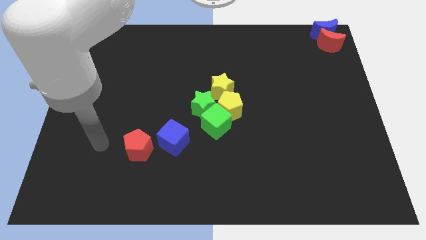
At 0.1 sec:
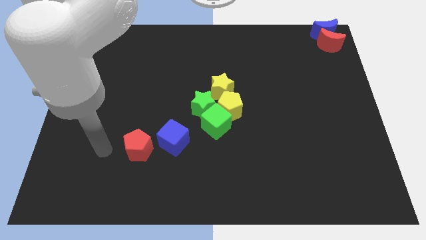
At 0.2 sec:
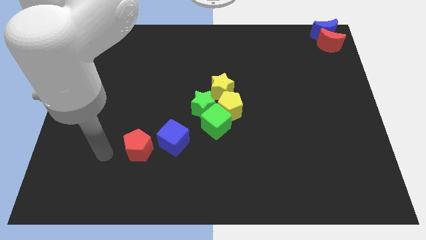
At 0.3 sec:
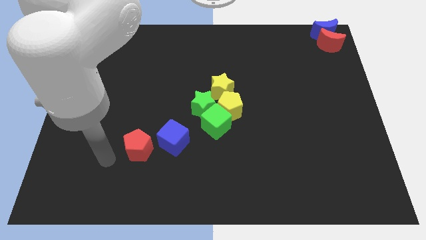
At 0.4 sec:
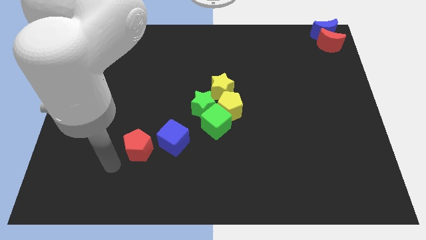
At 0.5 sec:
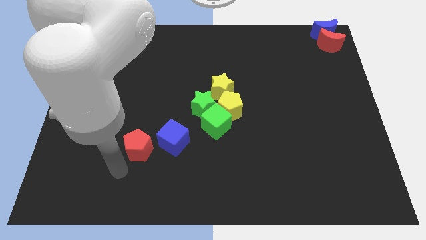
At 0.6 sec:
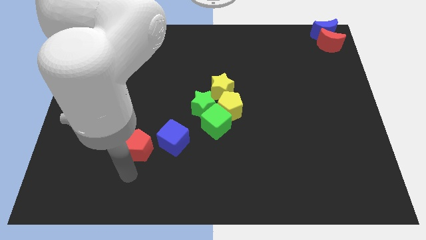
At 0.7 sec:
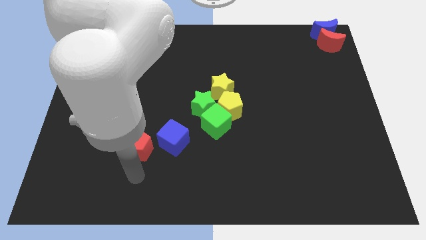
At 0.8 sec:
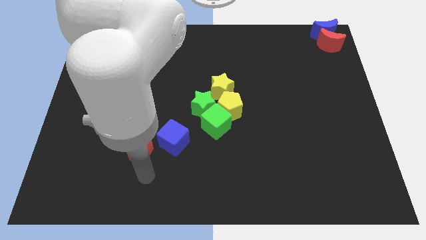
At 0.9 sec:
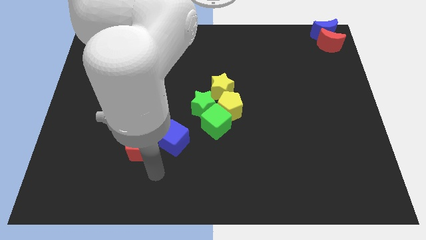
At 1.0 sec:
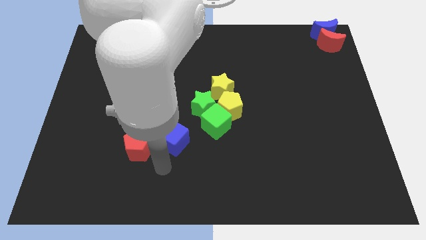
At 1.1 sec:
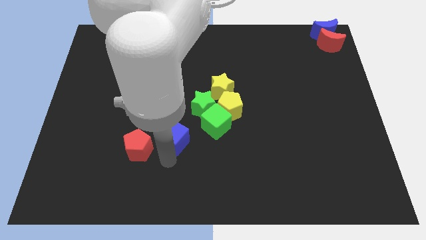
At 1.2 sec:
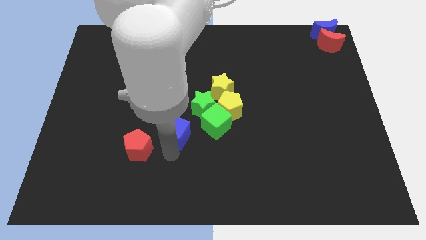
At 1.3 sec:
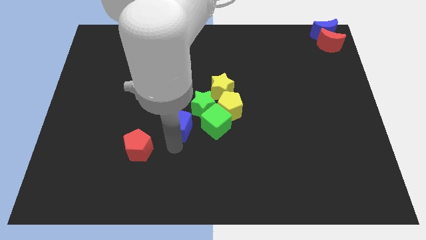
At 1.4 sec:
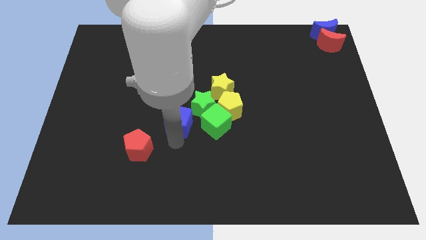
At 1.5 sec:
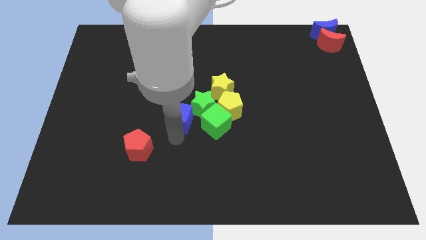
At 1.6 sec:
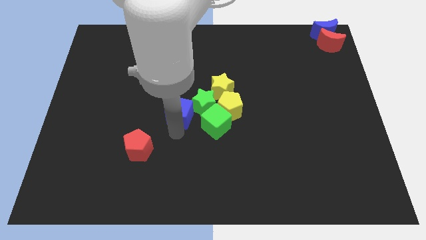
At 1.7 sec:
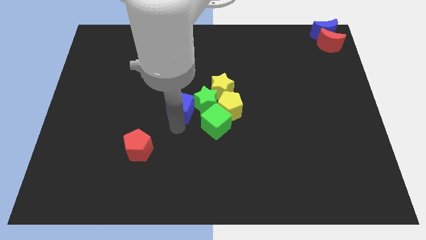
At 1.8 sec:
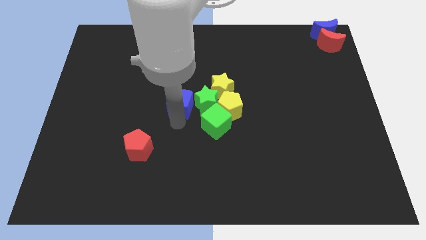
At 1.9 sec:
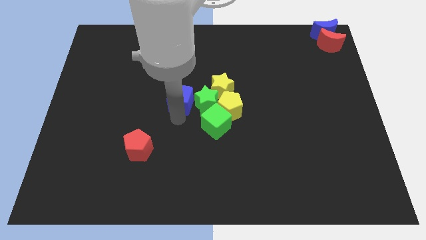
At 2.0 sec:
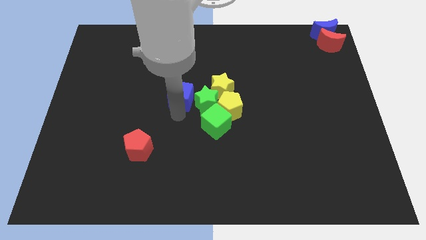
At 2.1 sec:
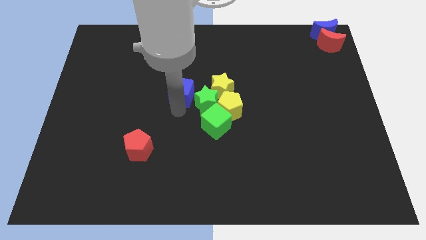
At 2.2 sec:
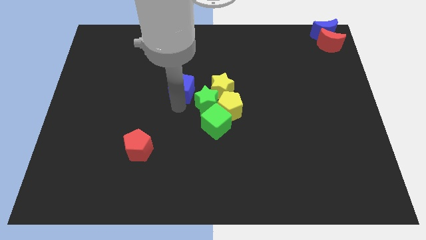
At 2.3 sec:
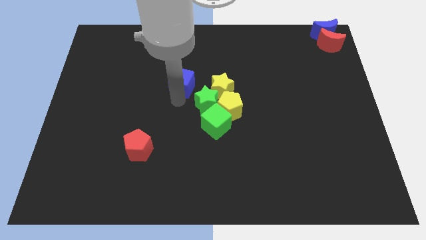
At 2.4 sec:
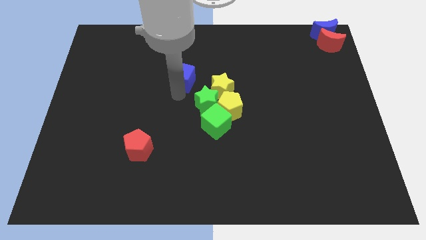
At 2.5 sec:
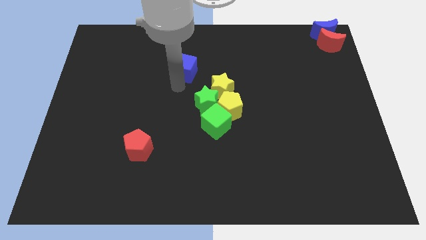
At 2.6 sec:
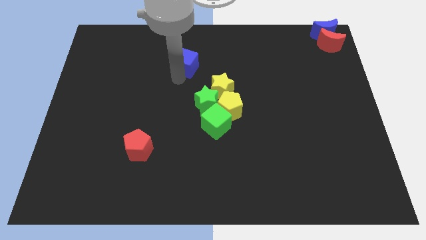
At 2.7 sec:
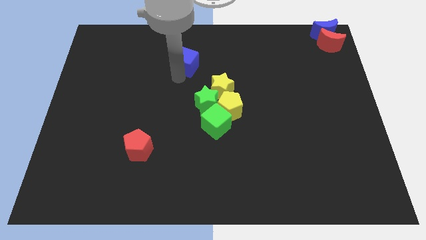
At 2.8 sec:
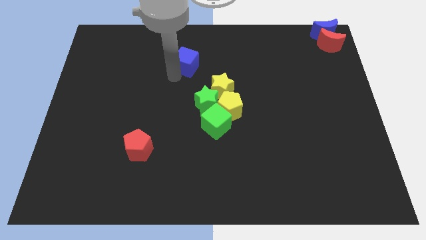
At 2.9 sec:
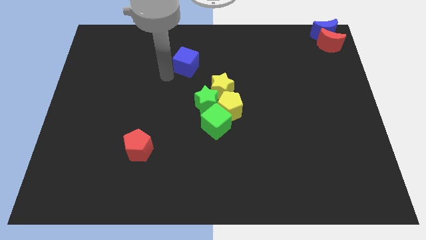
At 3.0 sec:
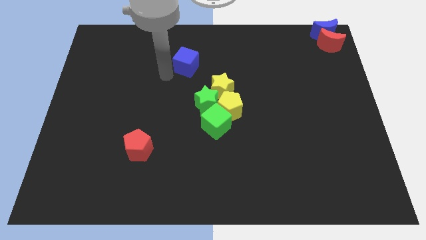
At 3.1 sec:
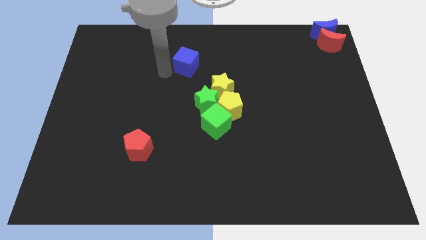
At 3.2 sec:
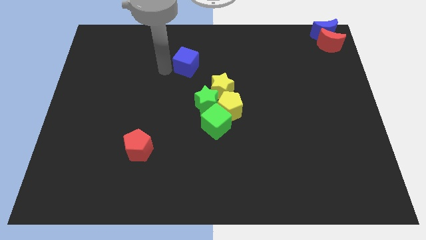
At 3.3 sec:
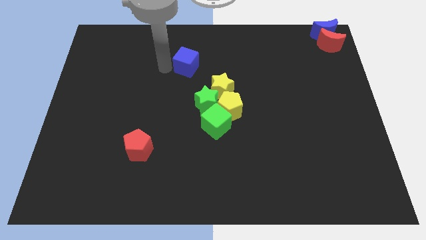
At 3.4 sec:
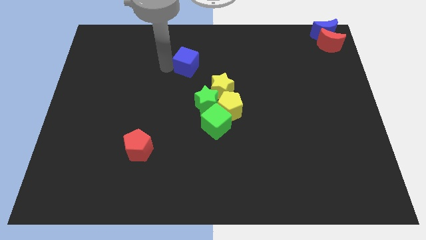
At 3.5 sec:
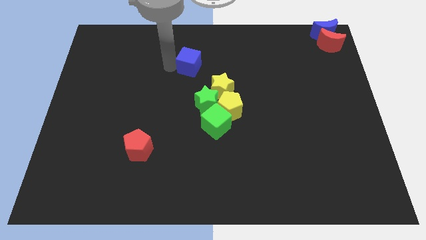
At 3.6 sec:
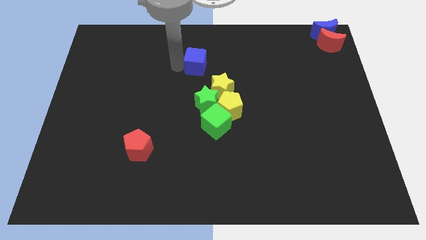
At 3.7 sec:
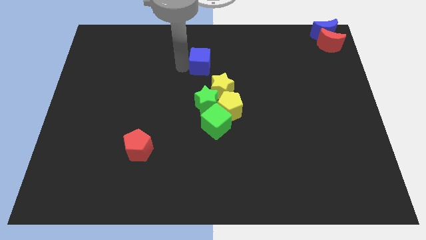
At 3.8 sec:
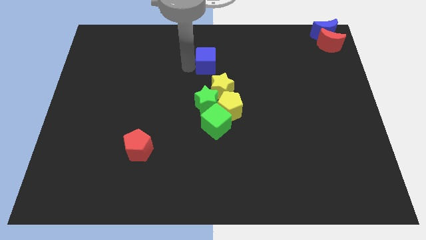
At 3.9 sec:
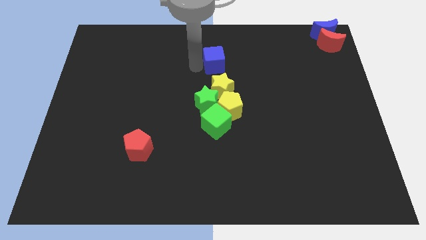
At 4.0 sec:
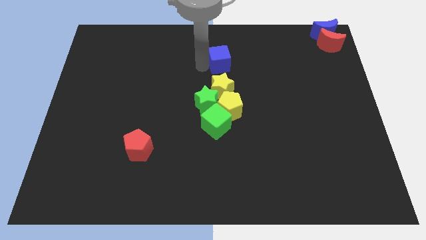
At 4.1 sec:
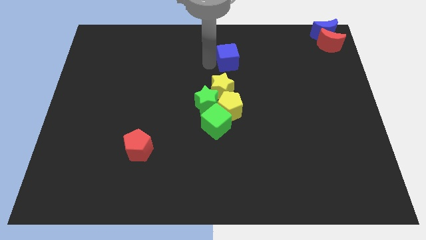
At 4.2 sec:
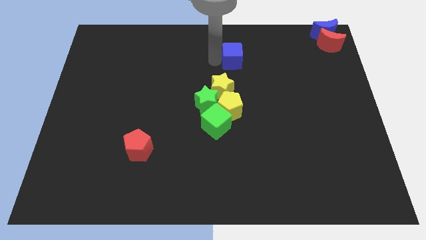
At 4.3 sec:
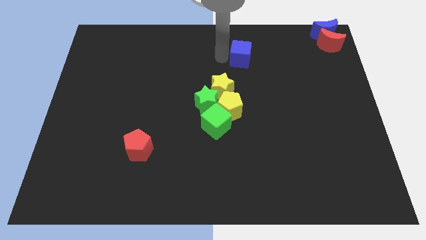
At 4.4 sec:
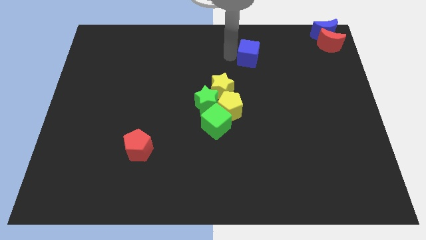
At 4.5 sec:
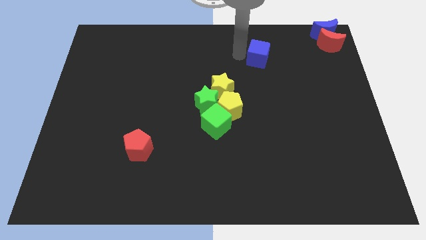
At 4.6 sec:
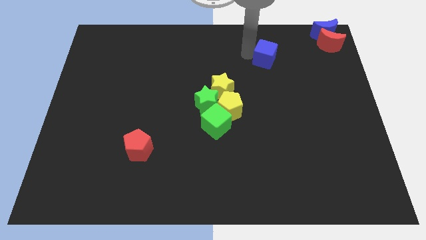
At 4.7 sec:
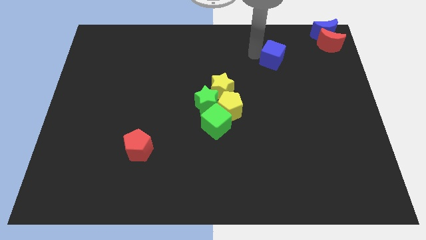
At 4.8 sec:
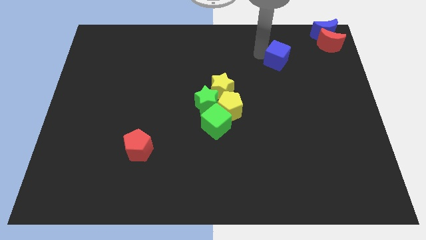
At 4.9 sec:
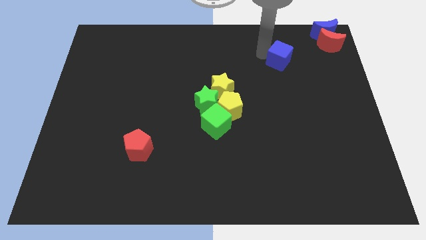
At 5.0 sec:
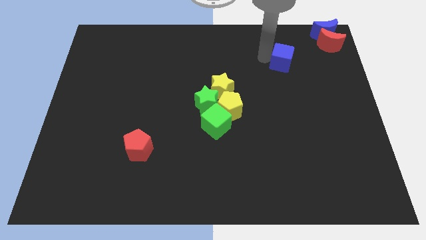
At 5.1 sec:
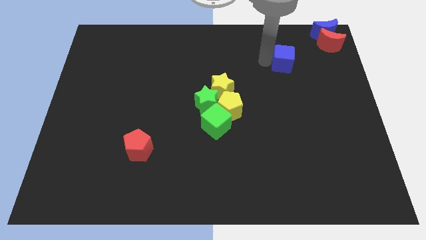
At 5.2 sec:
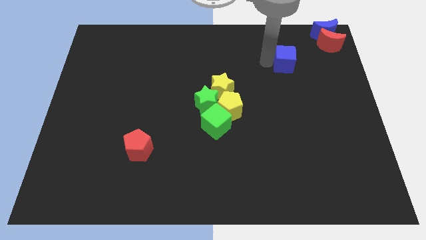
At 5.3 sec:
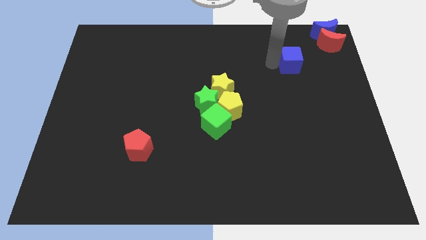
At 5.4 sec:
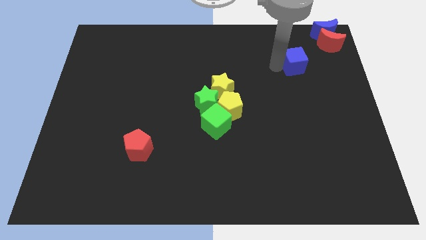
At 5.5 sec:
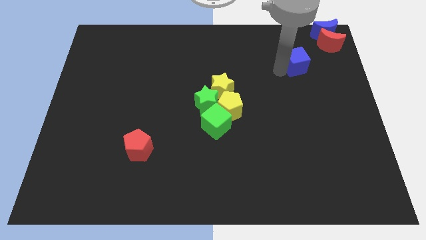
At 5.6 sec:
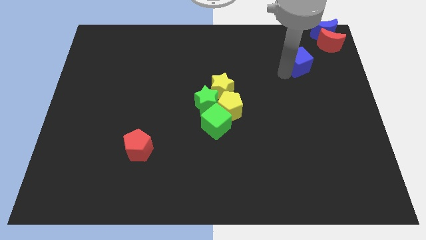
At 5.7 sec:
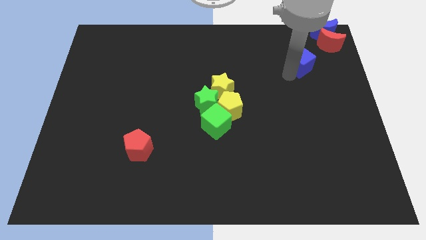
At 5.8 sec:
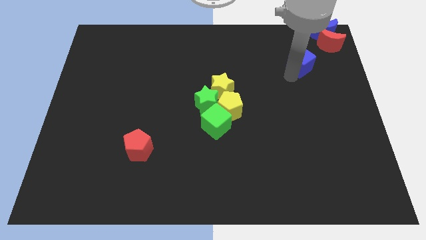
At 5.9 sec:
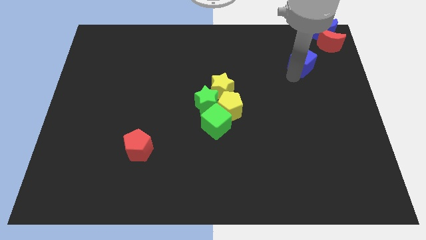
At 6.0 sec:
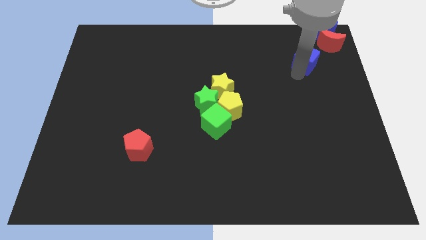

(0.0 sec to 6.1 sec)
move the blue cube towards the top right of the board

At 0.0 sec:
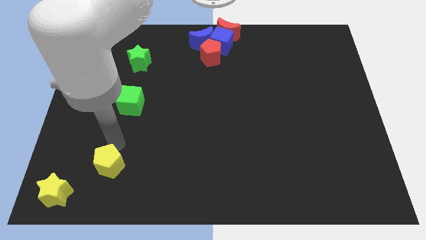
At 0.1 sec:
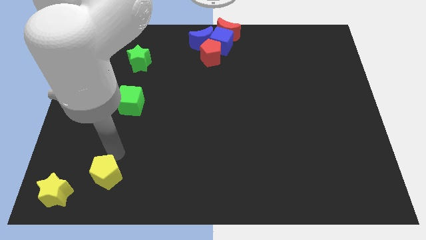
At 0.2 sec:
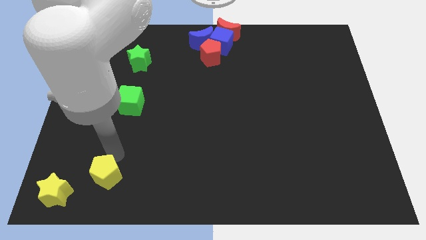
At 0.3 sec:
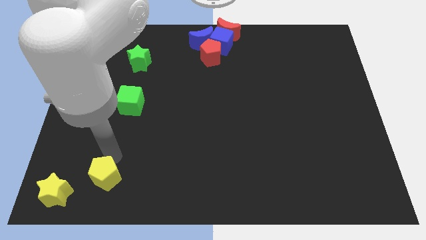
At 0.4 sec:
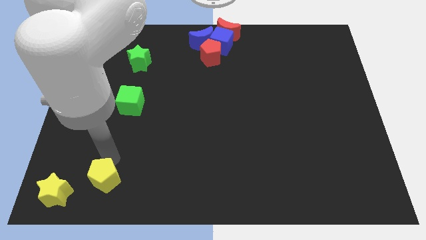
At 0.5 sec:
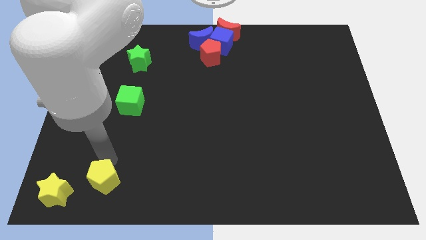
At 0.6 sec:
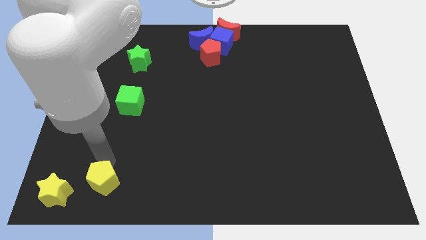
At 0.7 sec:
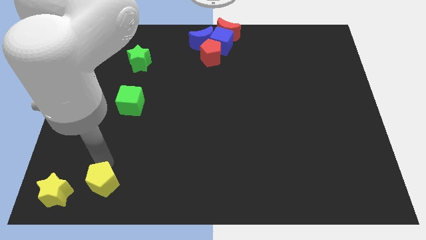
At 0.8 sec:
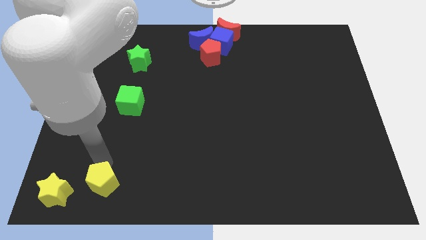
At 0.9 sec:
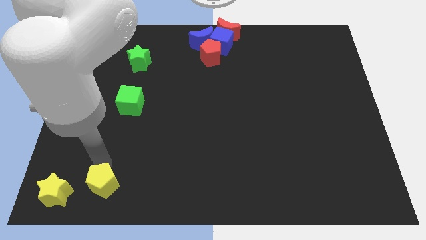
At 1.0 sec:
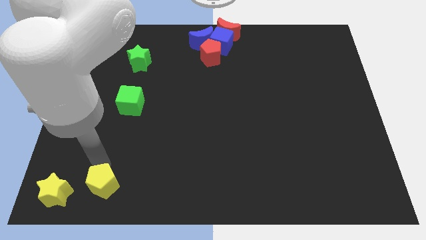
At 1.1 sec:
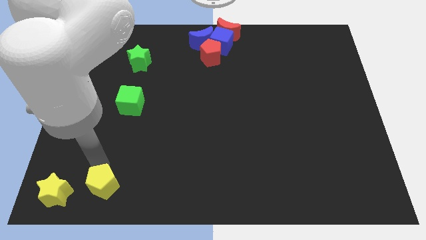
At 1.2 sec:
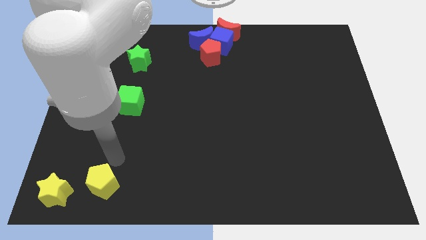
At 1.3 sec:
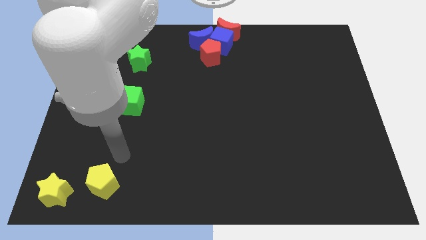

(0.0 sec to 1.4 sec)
put the yellow pentagon parallel to the yellow star

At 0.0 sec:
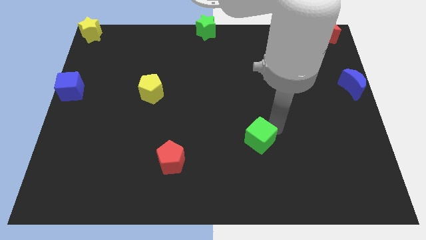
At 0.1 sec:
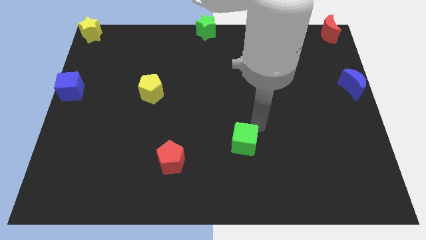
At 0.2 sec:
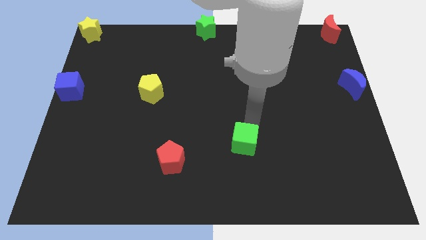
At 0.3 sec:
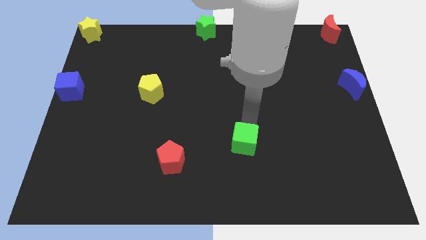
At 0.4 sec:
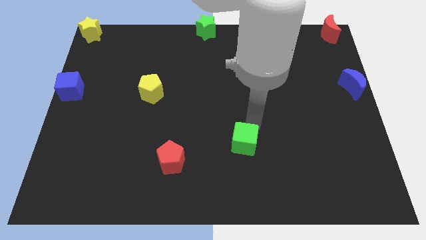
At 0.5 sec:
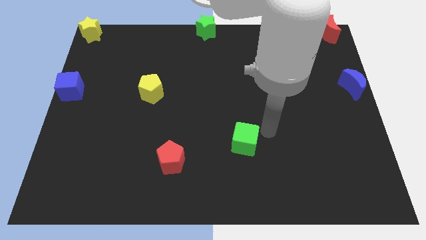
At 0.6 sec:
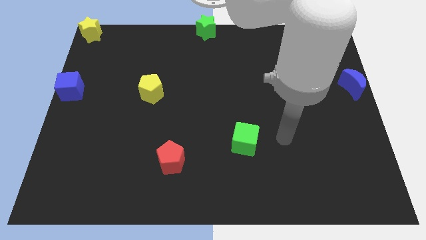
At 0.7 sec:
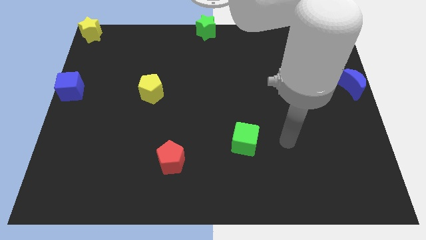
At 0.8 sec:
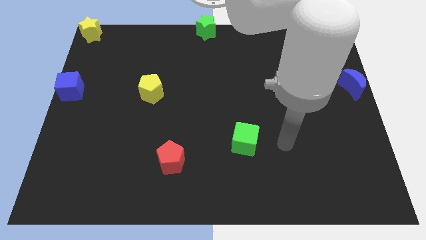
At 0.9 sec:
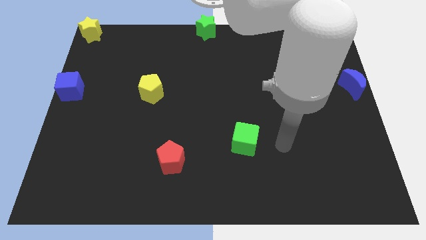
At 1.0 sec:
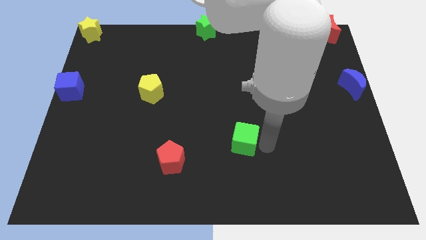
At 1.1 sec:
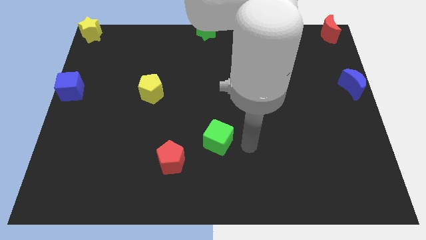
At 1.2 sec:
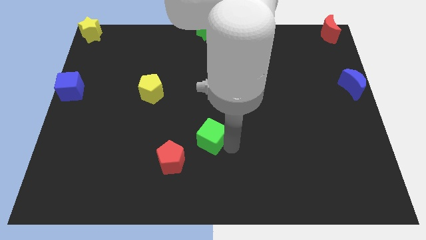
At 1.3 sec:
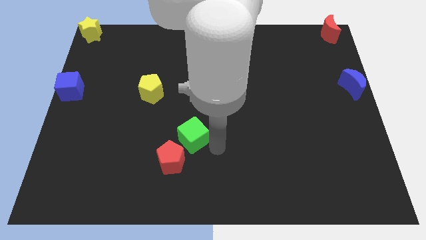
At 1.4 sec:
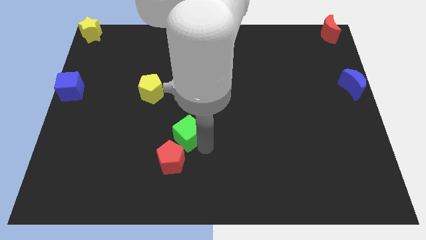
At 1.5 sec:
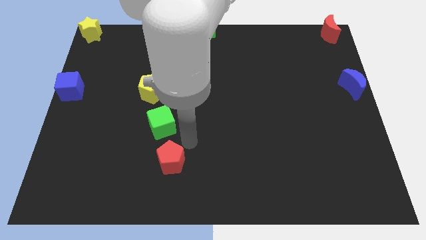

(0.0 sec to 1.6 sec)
put the green cube between the red pentagon and yellow pentagon
